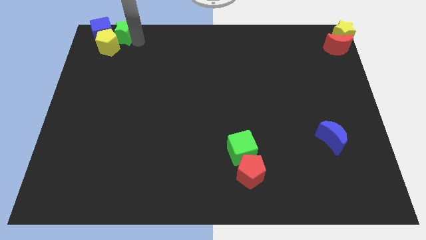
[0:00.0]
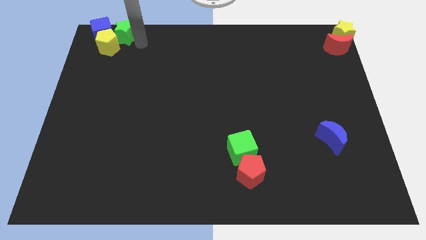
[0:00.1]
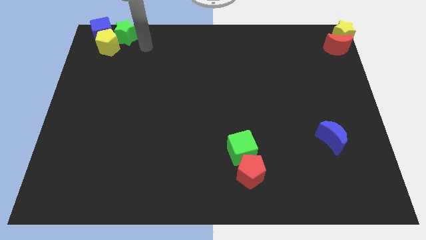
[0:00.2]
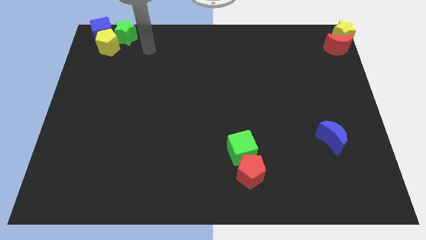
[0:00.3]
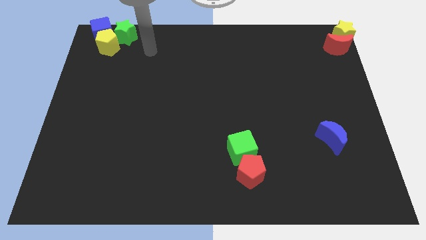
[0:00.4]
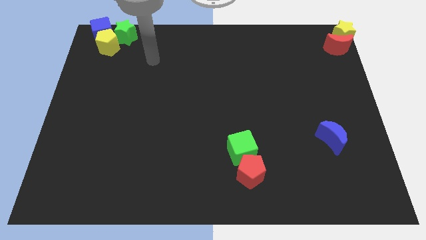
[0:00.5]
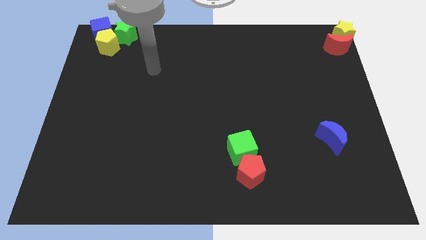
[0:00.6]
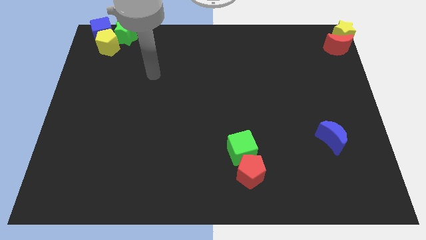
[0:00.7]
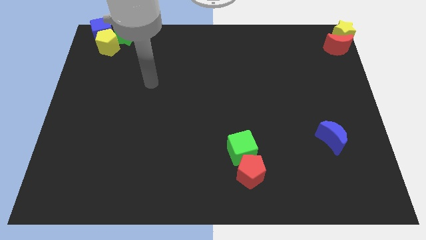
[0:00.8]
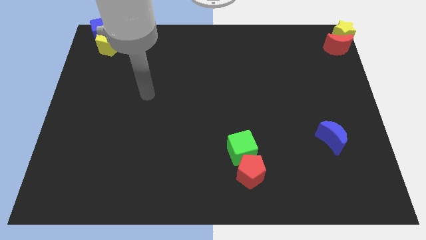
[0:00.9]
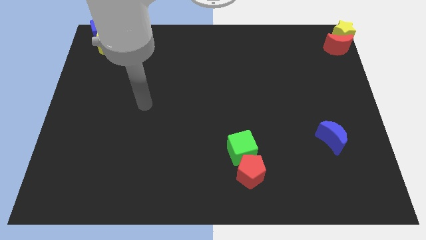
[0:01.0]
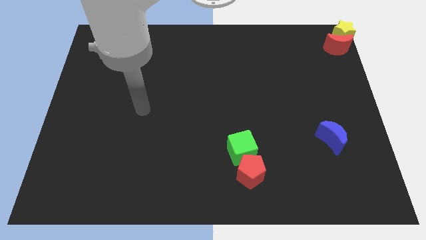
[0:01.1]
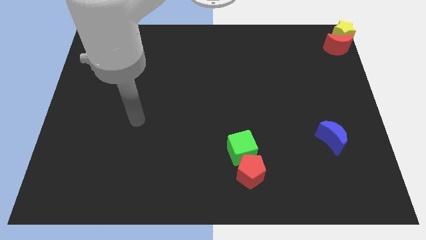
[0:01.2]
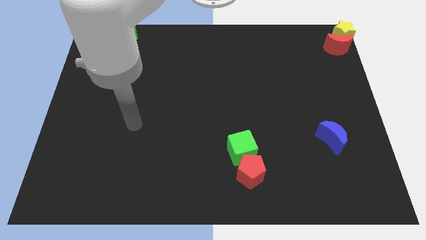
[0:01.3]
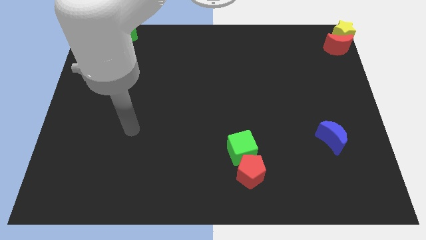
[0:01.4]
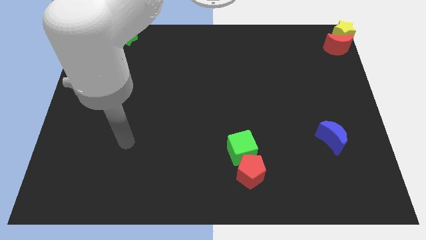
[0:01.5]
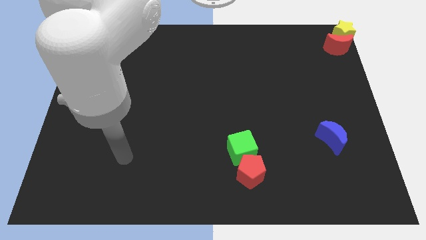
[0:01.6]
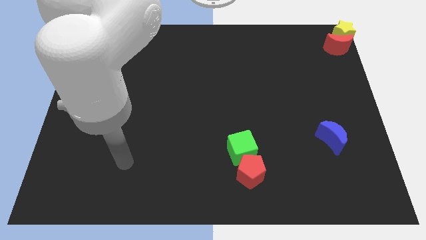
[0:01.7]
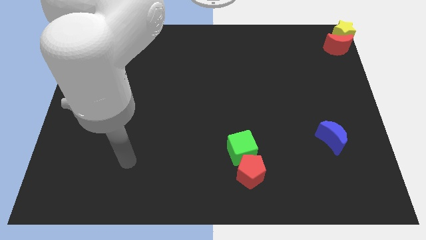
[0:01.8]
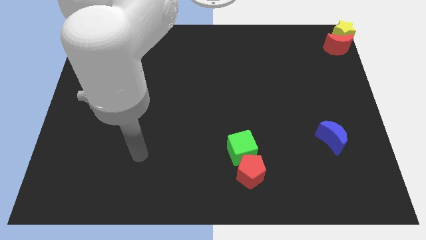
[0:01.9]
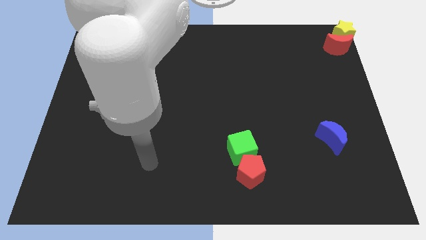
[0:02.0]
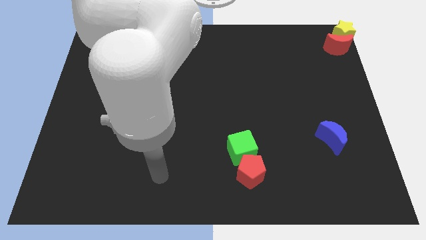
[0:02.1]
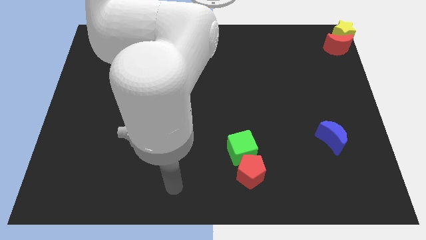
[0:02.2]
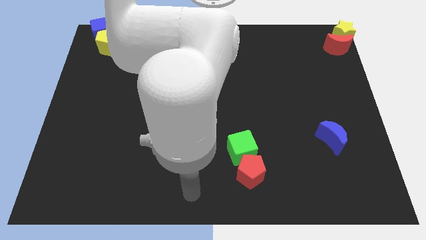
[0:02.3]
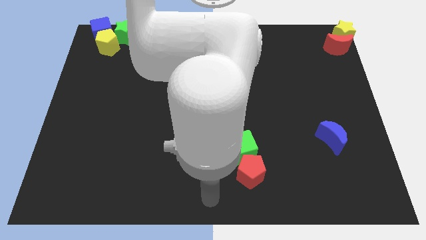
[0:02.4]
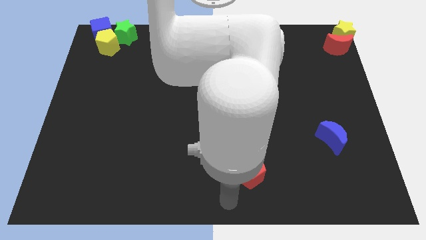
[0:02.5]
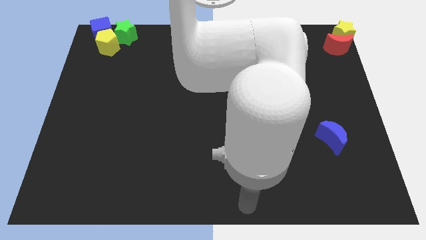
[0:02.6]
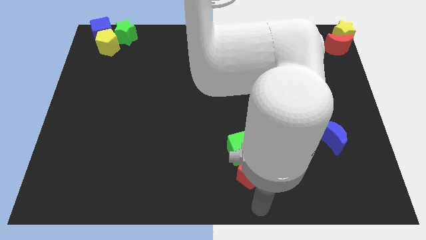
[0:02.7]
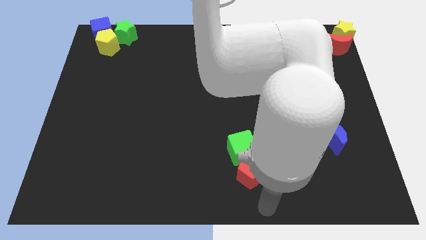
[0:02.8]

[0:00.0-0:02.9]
move the arm away from the green star

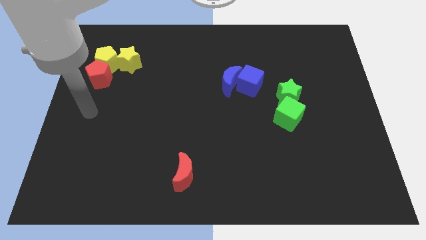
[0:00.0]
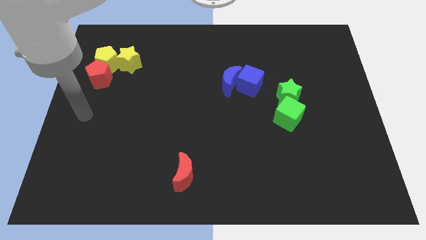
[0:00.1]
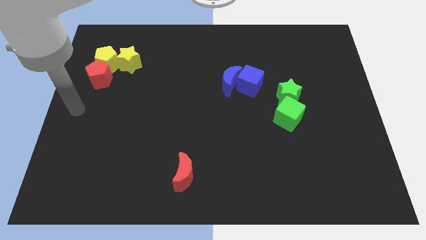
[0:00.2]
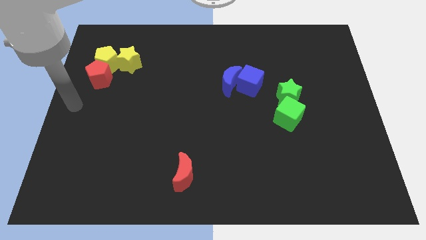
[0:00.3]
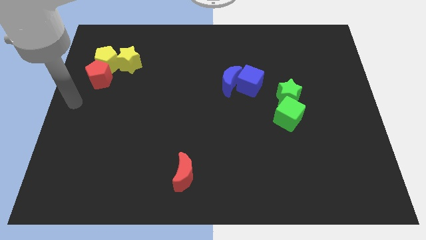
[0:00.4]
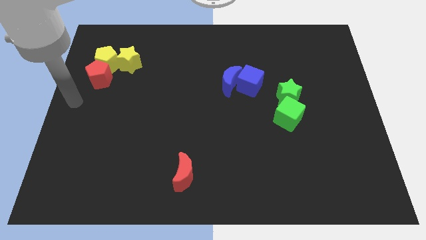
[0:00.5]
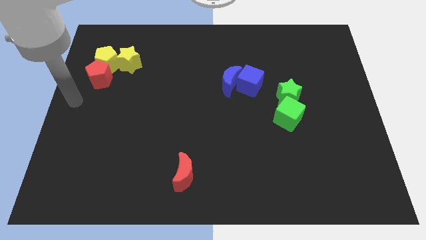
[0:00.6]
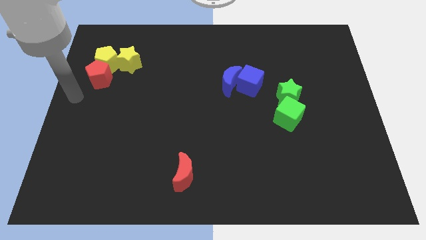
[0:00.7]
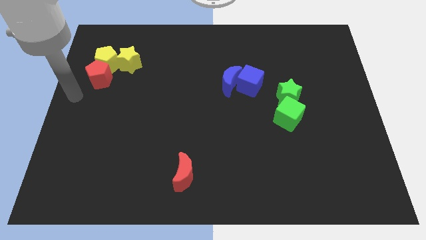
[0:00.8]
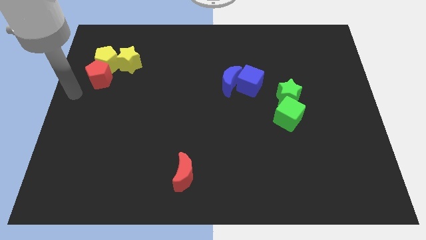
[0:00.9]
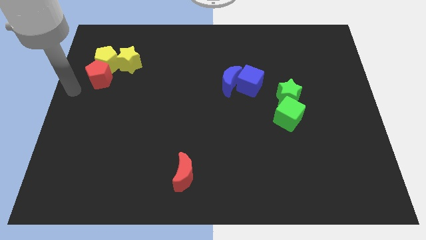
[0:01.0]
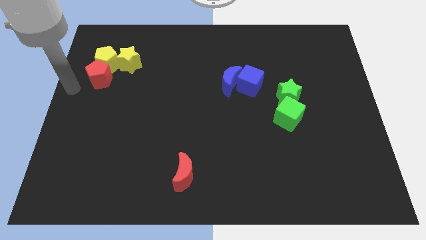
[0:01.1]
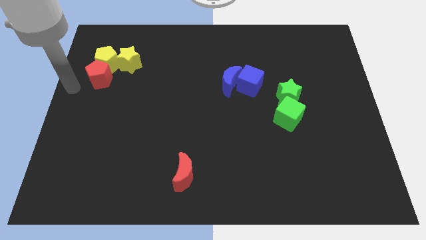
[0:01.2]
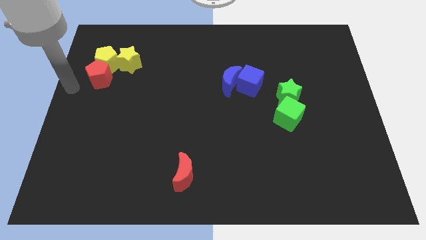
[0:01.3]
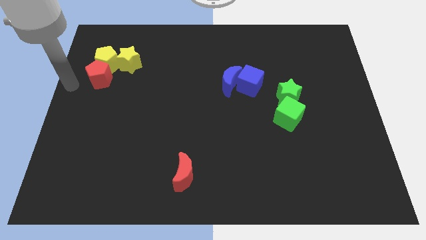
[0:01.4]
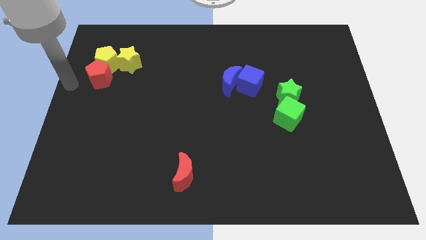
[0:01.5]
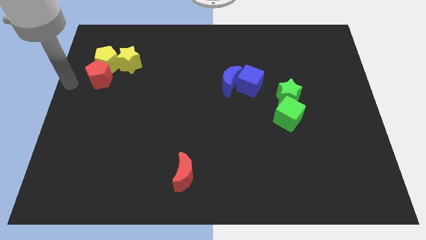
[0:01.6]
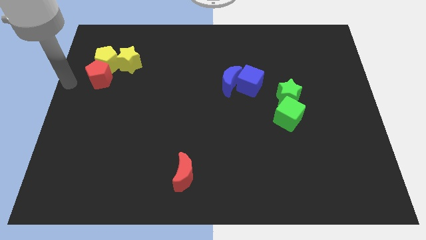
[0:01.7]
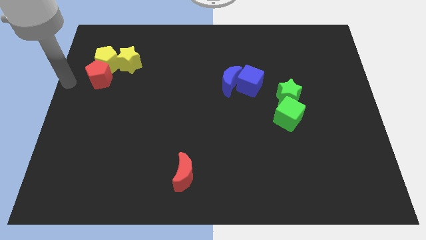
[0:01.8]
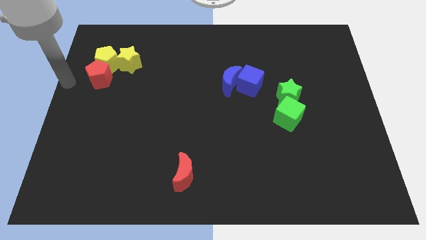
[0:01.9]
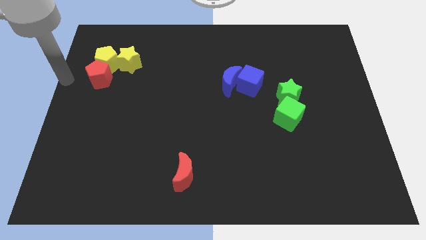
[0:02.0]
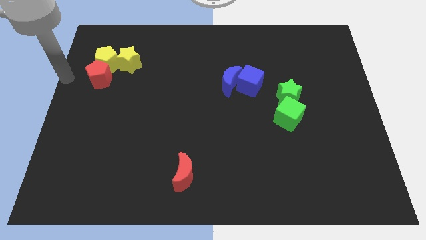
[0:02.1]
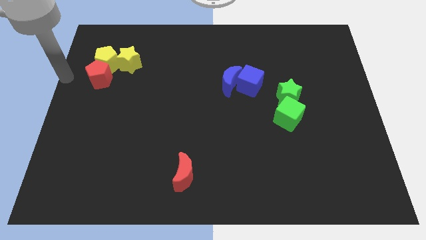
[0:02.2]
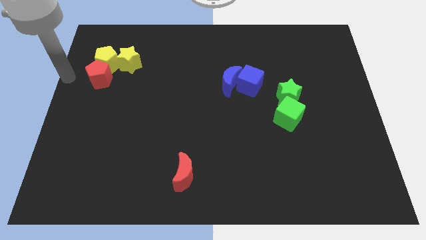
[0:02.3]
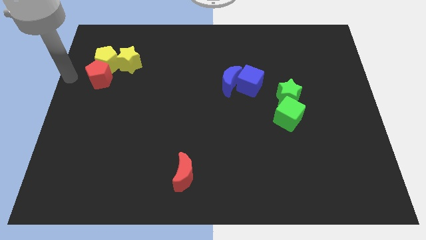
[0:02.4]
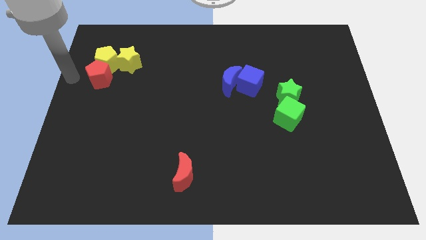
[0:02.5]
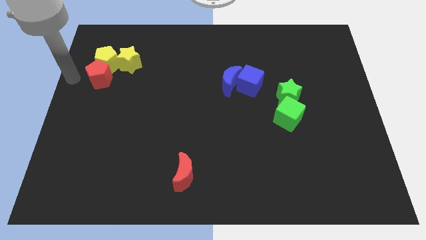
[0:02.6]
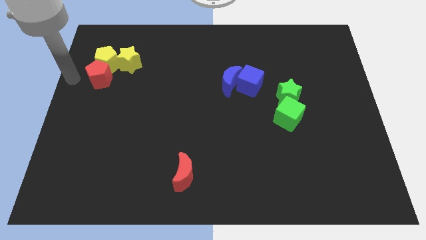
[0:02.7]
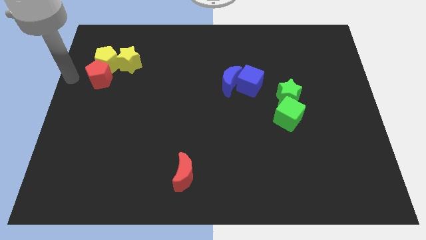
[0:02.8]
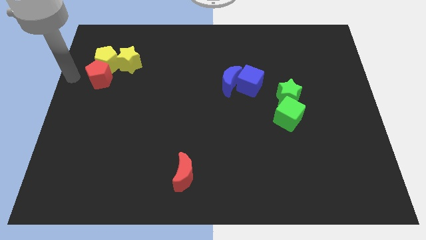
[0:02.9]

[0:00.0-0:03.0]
move the arm left to the red pentagon

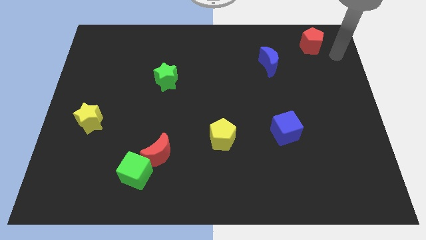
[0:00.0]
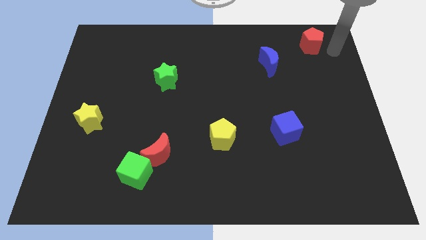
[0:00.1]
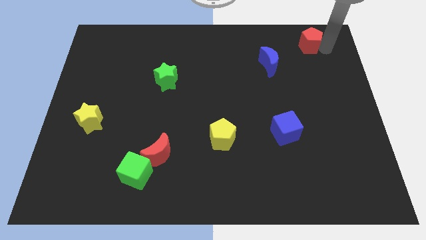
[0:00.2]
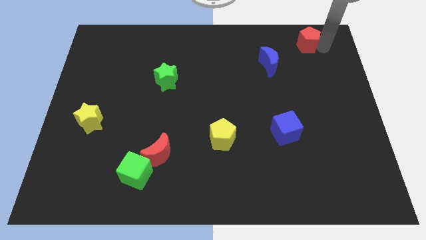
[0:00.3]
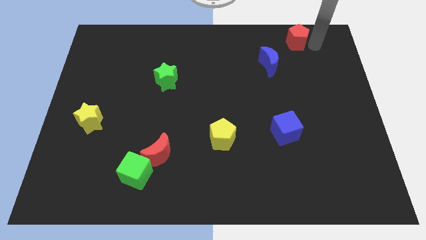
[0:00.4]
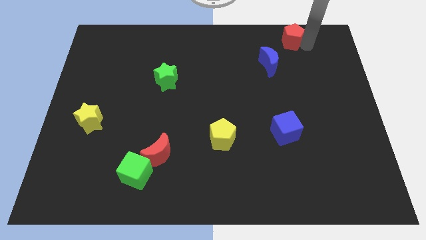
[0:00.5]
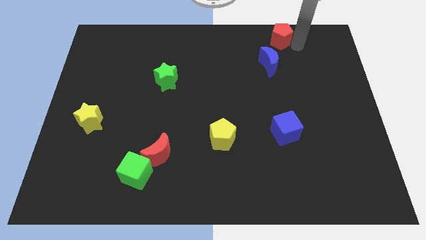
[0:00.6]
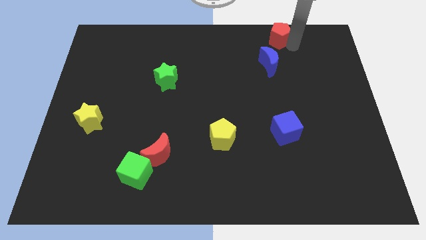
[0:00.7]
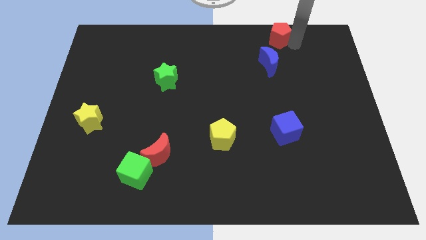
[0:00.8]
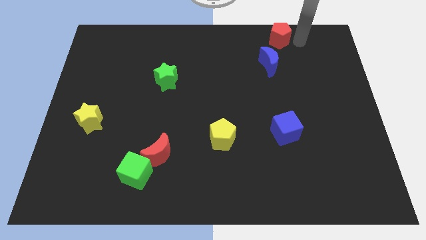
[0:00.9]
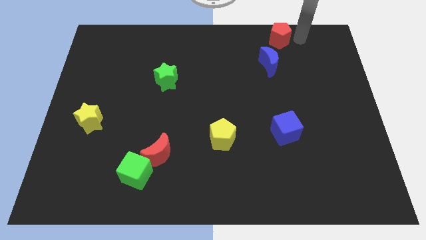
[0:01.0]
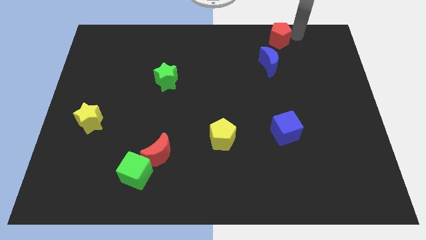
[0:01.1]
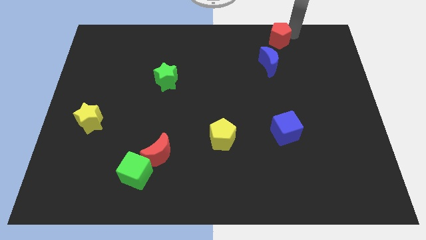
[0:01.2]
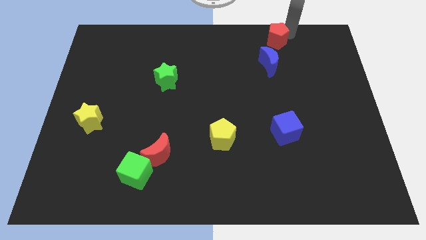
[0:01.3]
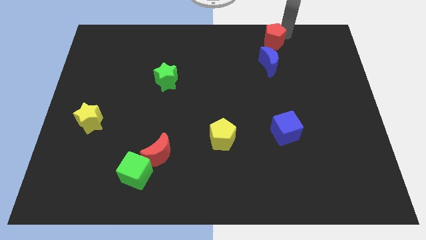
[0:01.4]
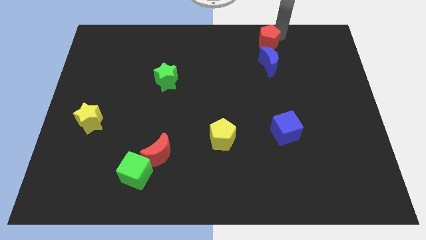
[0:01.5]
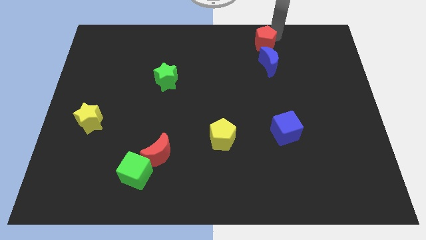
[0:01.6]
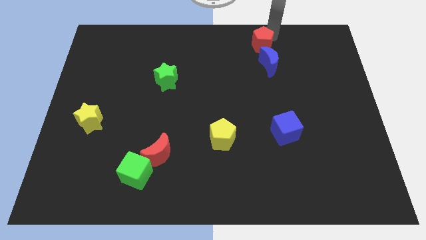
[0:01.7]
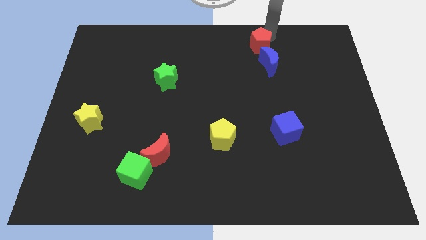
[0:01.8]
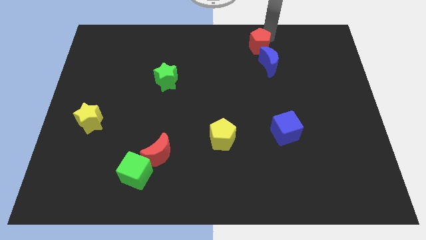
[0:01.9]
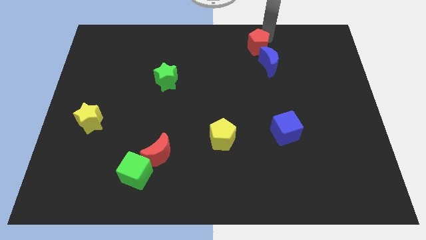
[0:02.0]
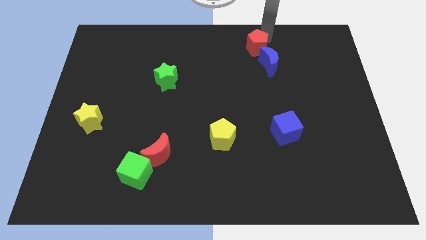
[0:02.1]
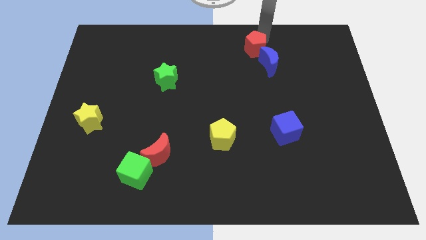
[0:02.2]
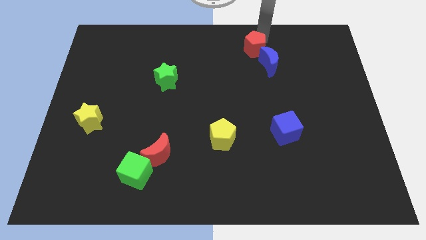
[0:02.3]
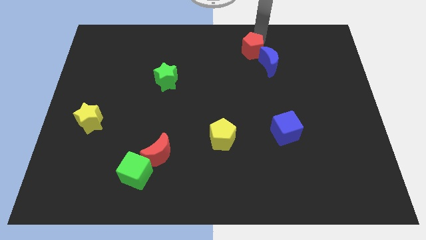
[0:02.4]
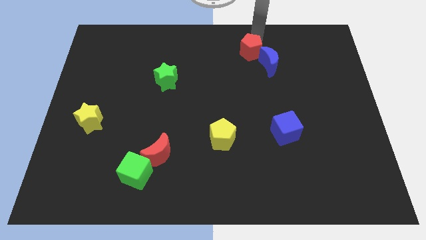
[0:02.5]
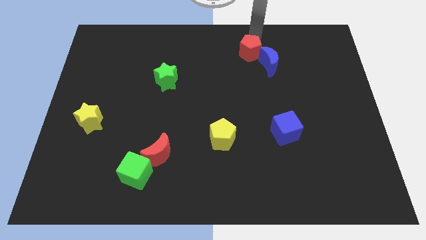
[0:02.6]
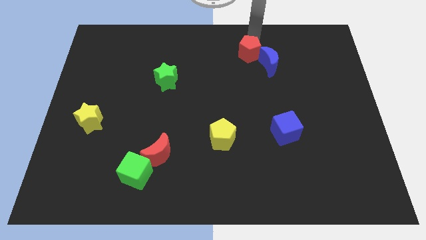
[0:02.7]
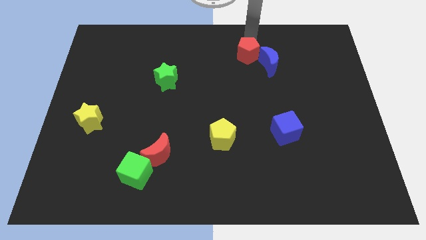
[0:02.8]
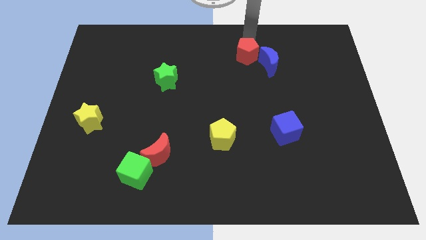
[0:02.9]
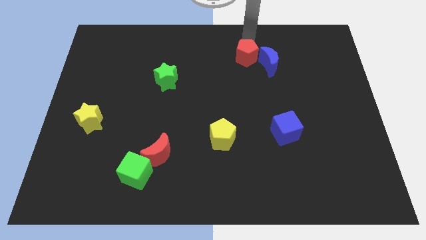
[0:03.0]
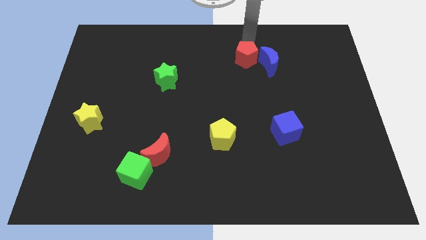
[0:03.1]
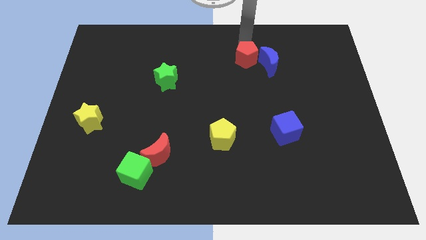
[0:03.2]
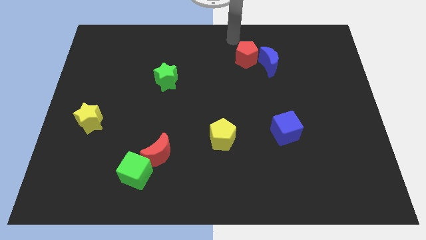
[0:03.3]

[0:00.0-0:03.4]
move the red pentagon close to the left side of the blue crescent
